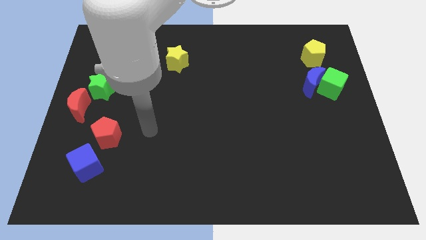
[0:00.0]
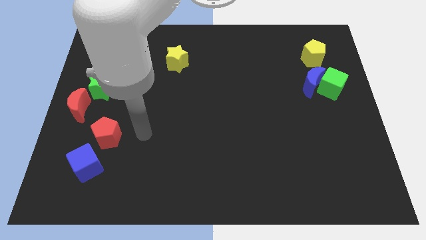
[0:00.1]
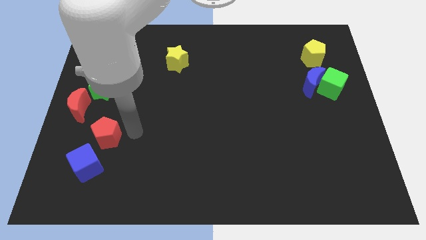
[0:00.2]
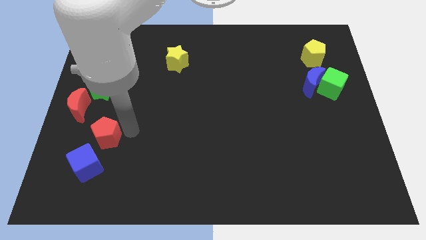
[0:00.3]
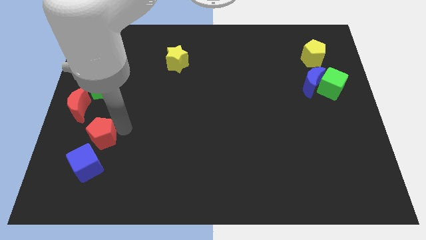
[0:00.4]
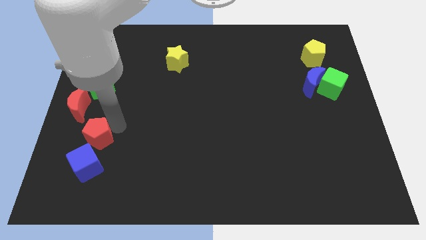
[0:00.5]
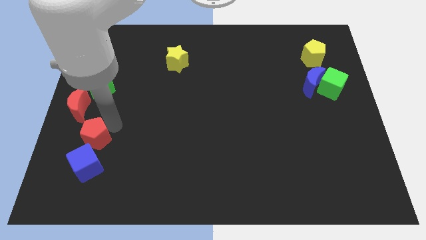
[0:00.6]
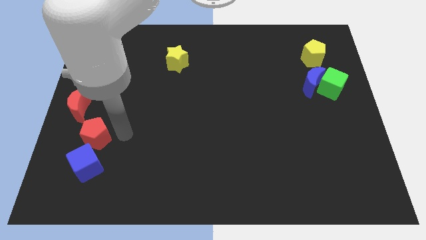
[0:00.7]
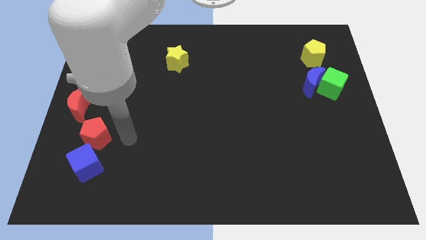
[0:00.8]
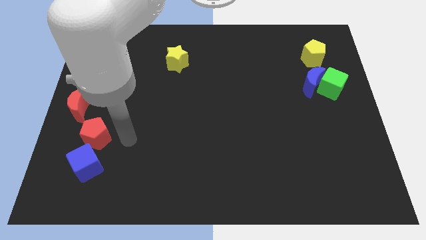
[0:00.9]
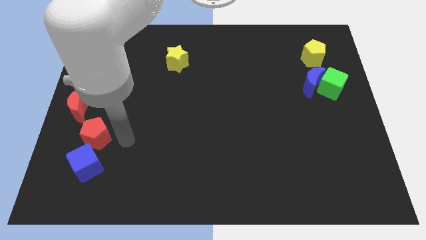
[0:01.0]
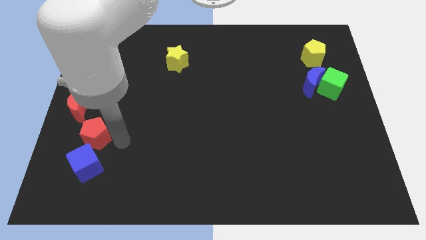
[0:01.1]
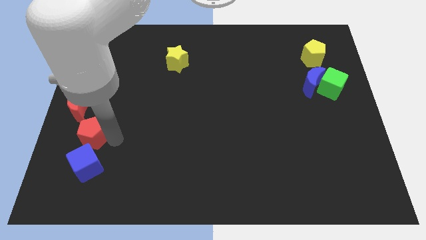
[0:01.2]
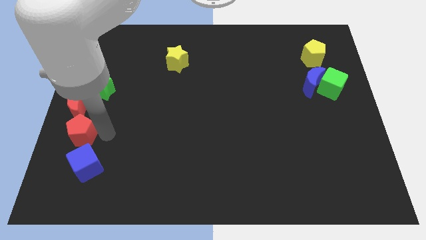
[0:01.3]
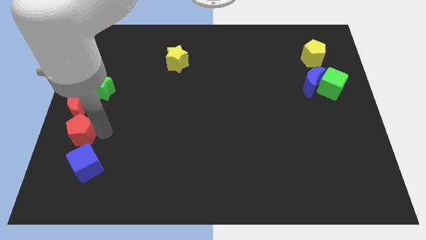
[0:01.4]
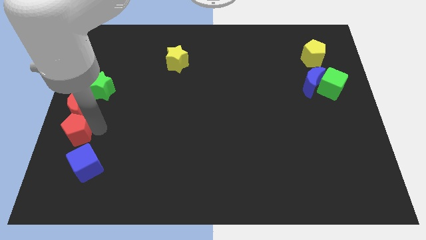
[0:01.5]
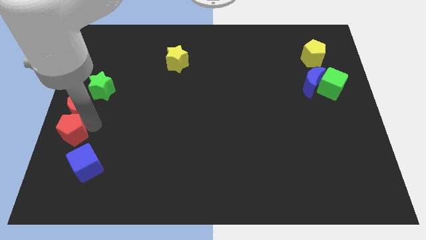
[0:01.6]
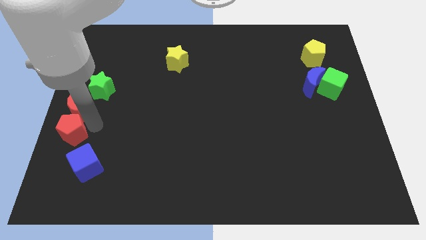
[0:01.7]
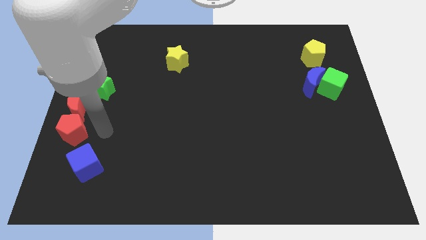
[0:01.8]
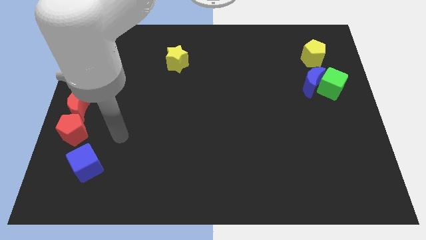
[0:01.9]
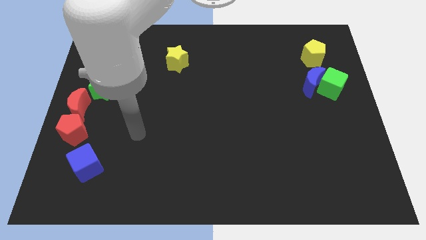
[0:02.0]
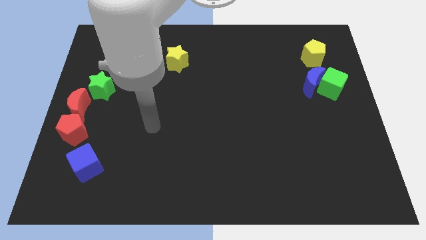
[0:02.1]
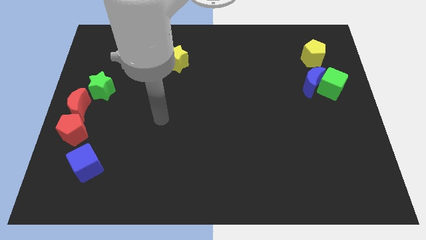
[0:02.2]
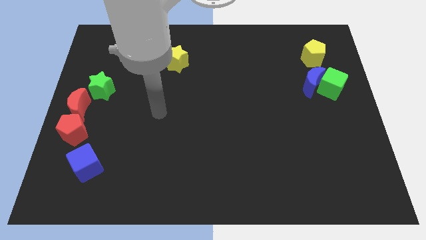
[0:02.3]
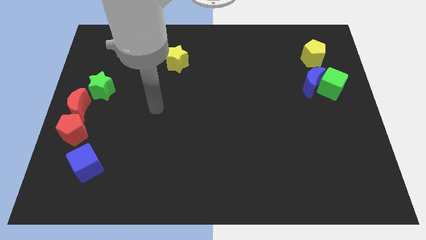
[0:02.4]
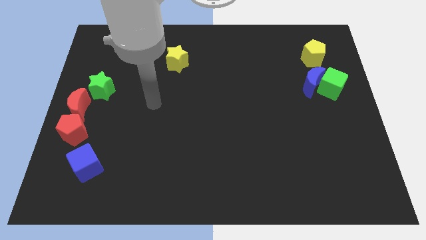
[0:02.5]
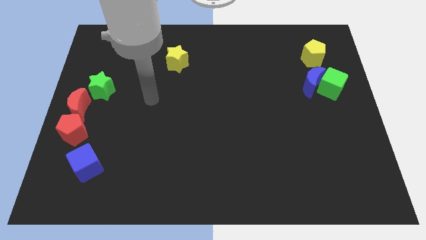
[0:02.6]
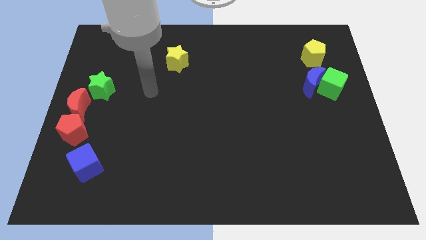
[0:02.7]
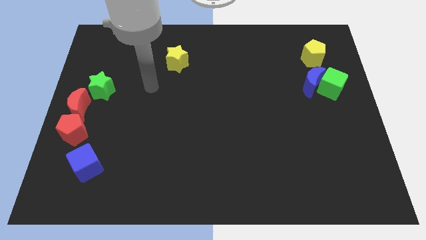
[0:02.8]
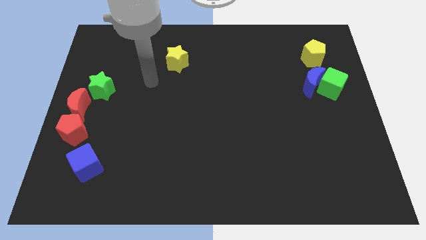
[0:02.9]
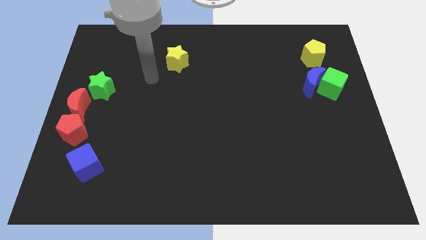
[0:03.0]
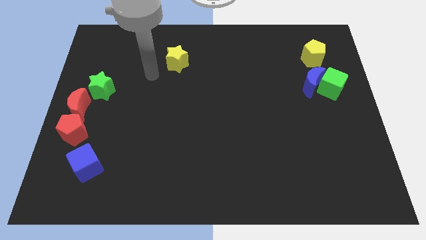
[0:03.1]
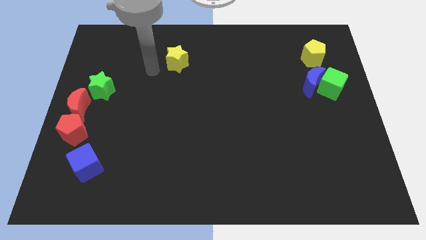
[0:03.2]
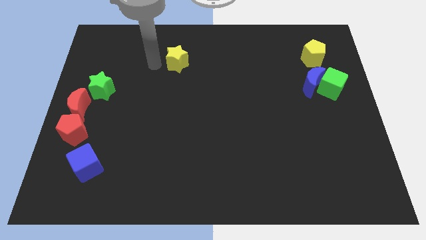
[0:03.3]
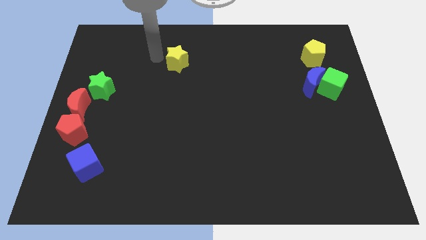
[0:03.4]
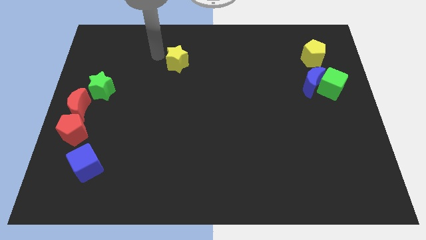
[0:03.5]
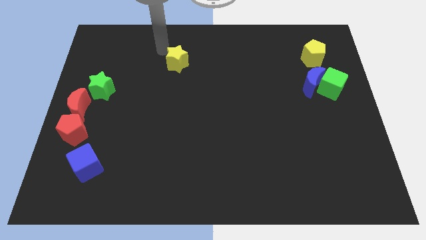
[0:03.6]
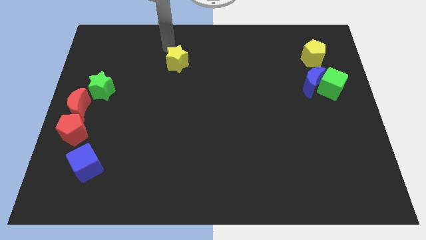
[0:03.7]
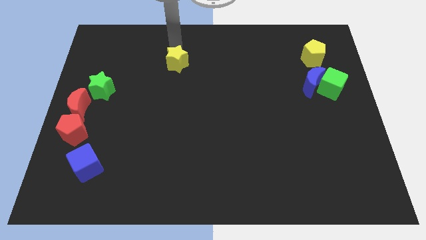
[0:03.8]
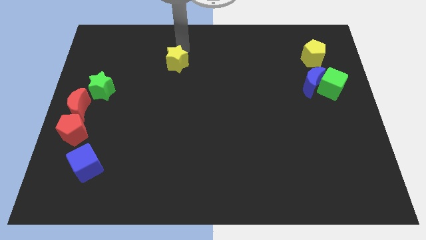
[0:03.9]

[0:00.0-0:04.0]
place the red pentagon below the red crescent

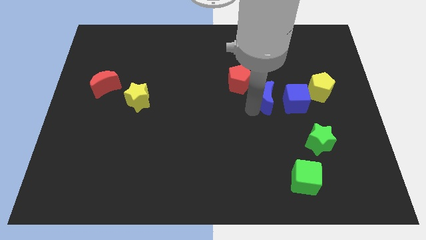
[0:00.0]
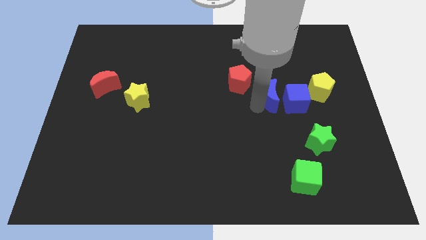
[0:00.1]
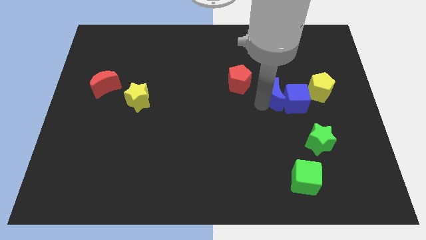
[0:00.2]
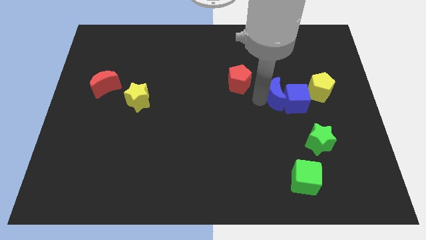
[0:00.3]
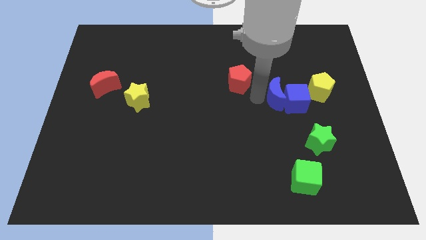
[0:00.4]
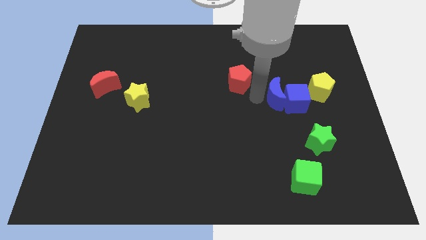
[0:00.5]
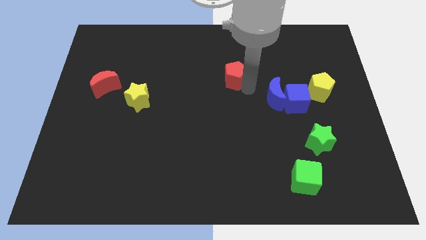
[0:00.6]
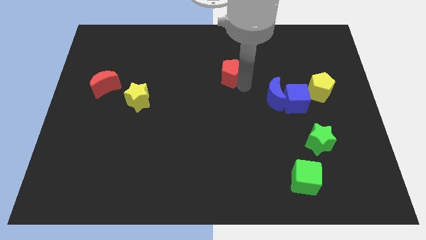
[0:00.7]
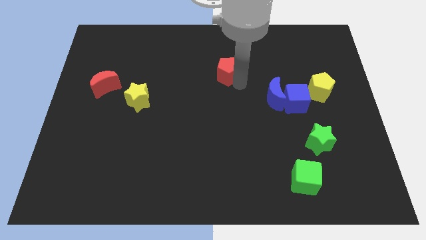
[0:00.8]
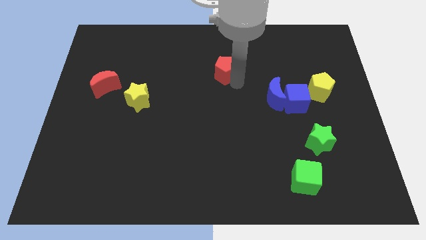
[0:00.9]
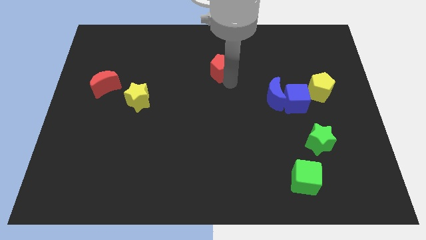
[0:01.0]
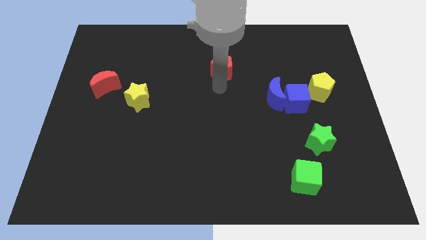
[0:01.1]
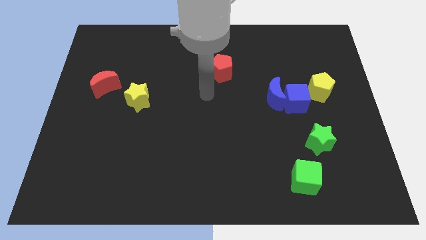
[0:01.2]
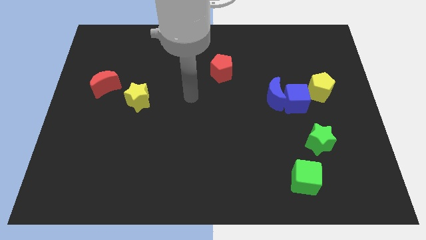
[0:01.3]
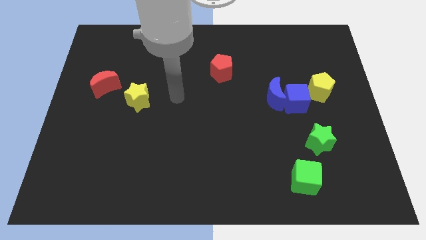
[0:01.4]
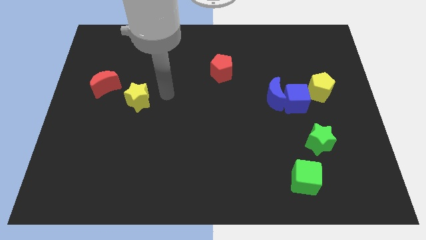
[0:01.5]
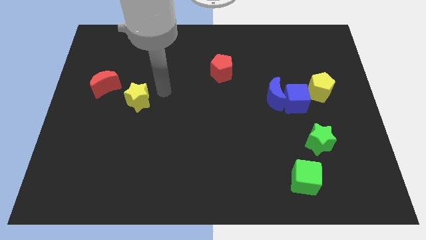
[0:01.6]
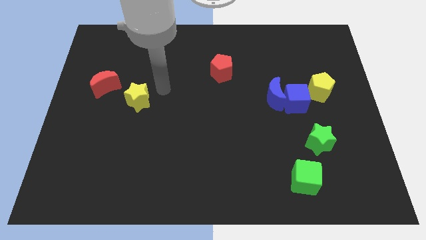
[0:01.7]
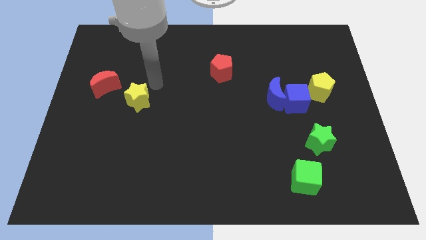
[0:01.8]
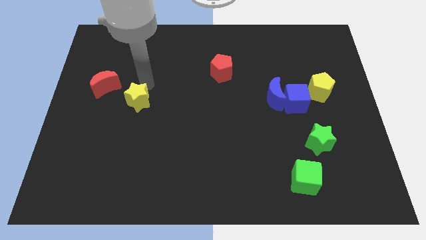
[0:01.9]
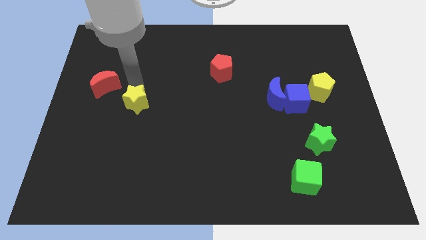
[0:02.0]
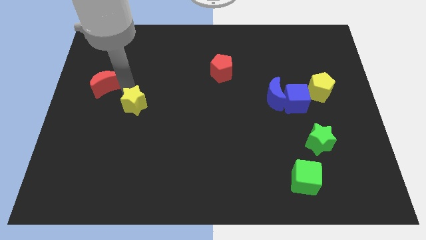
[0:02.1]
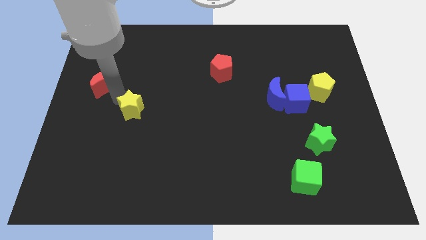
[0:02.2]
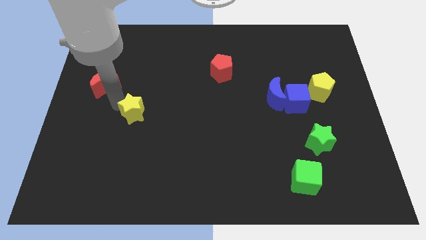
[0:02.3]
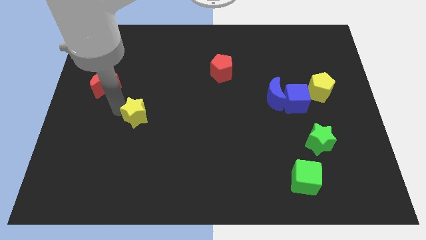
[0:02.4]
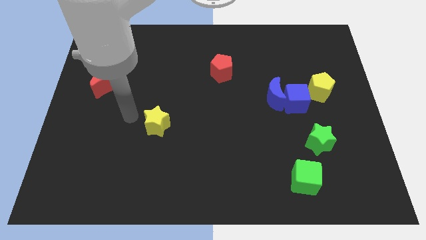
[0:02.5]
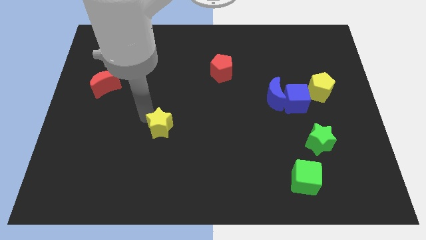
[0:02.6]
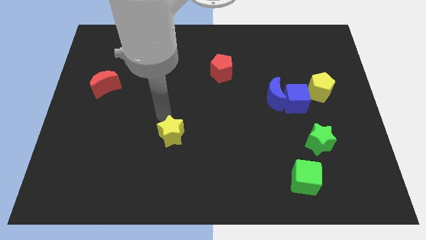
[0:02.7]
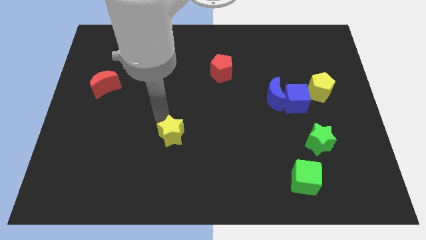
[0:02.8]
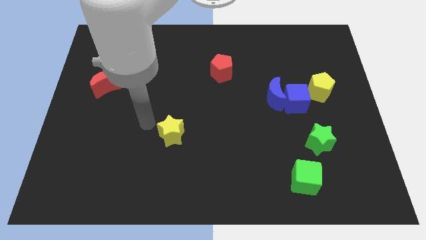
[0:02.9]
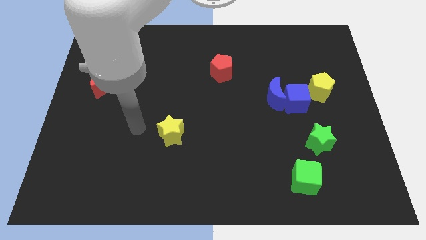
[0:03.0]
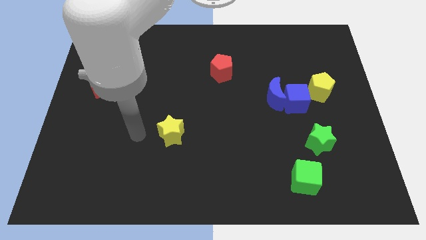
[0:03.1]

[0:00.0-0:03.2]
move the red pentagon slightly left

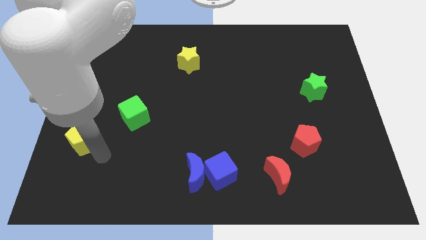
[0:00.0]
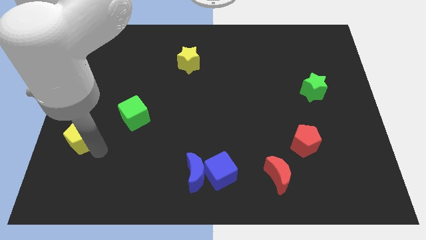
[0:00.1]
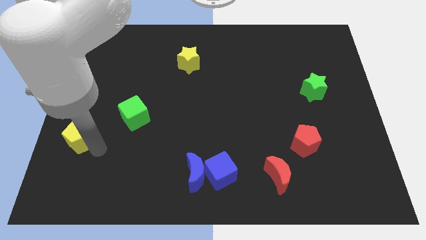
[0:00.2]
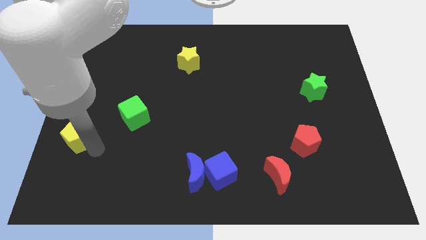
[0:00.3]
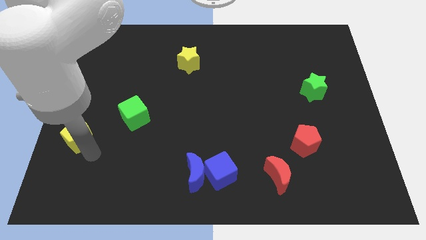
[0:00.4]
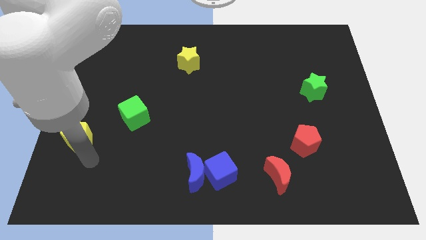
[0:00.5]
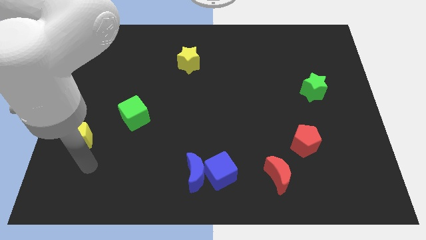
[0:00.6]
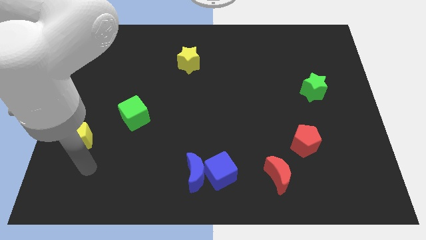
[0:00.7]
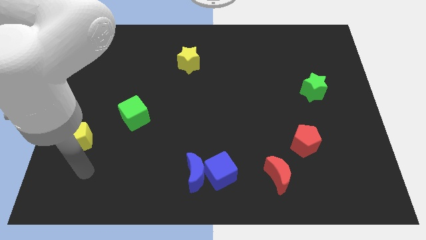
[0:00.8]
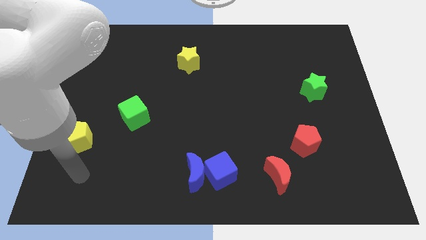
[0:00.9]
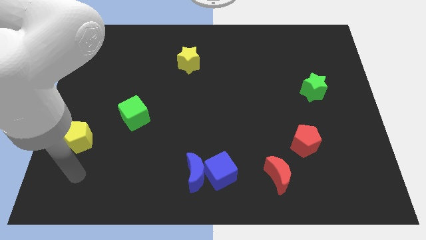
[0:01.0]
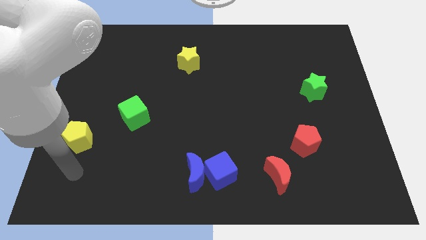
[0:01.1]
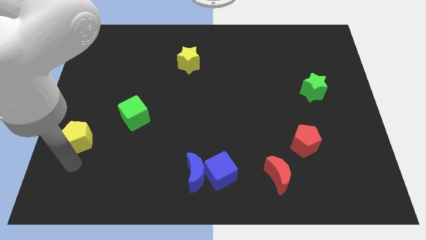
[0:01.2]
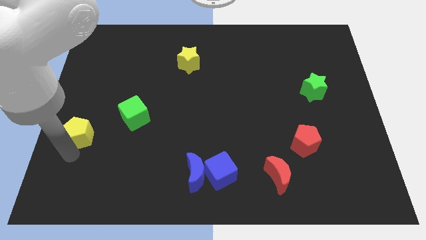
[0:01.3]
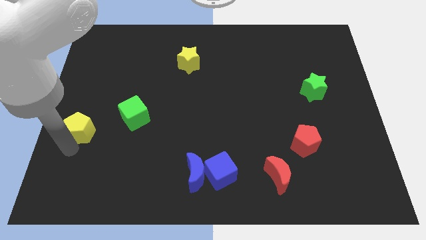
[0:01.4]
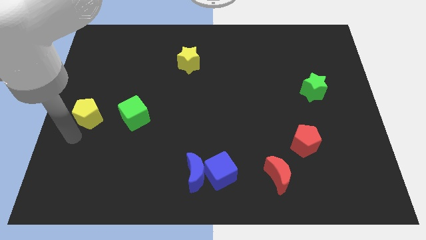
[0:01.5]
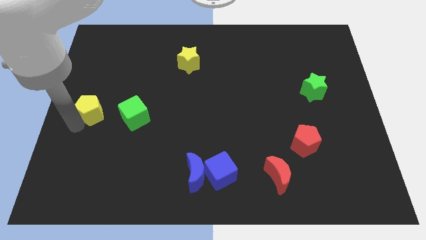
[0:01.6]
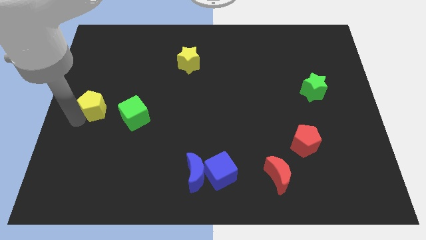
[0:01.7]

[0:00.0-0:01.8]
slide the yellow pentagon towards top

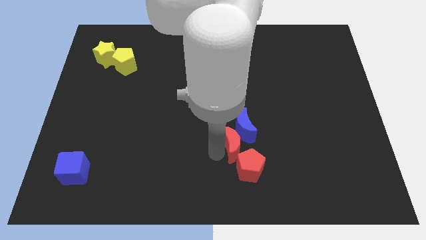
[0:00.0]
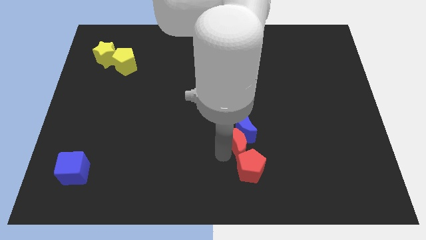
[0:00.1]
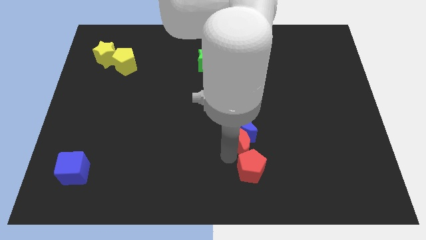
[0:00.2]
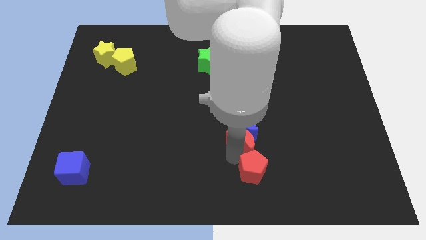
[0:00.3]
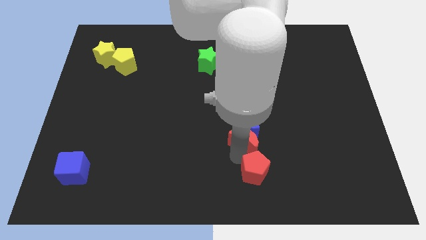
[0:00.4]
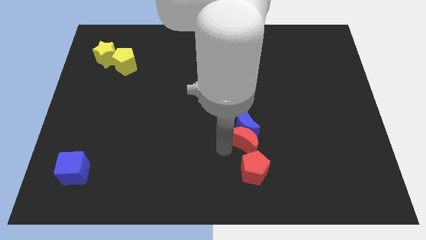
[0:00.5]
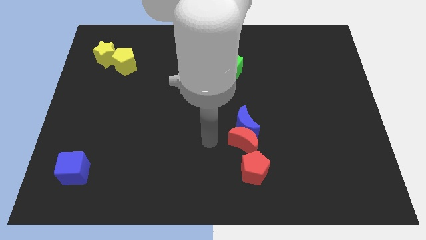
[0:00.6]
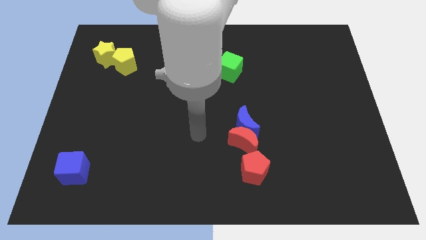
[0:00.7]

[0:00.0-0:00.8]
move the red moon down to the blue moon
